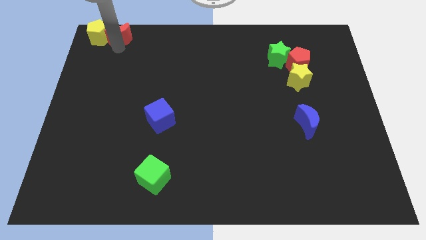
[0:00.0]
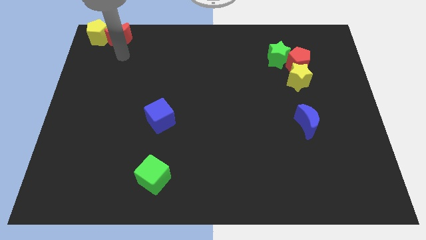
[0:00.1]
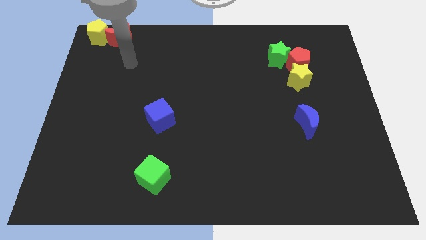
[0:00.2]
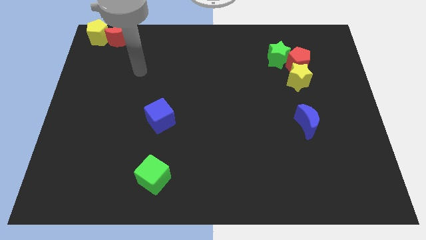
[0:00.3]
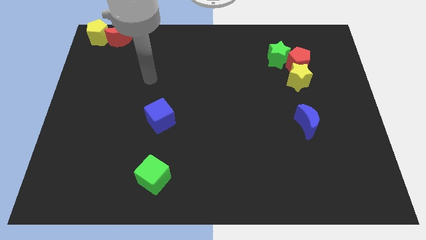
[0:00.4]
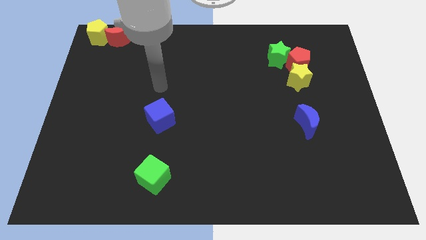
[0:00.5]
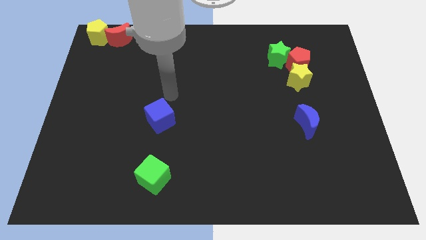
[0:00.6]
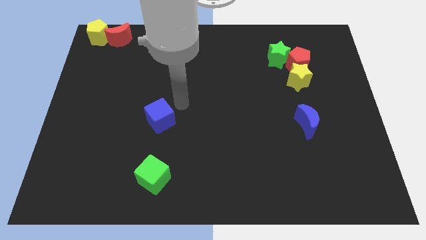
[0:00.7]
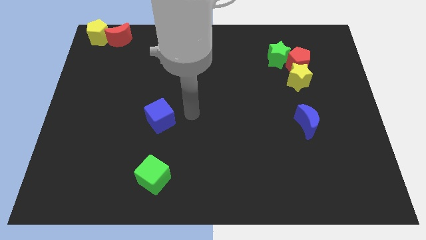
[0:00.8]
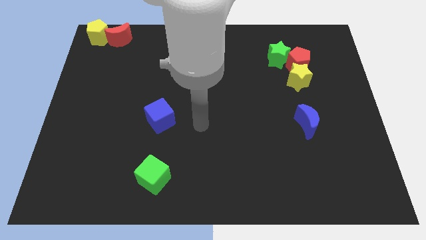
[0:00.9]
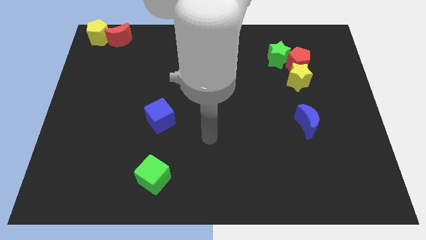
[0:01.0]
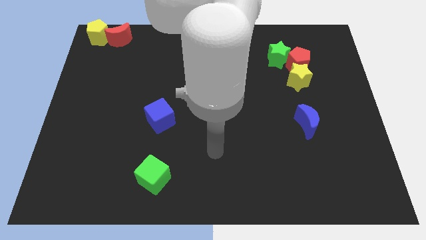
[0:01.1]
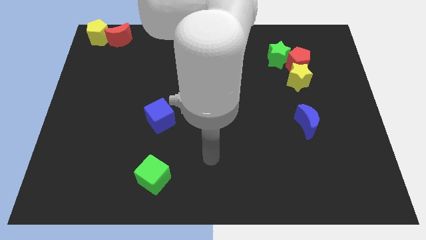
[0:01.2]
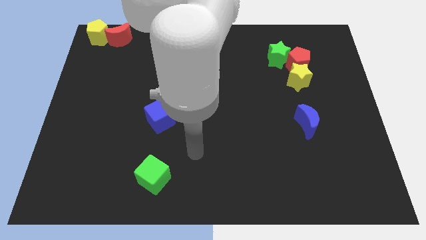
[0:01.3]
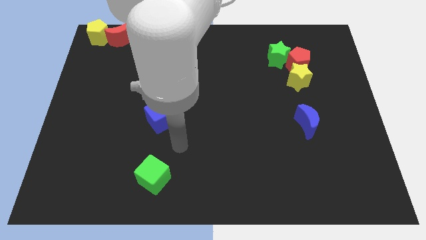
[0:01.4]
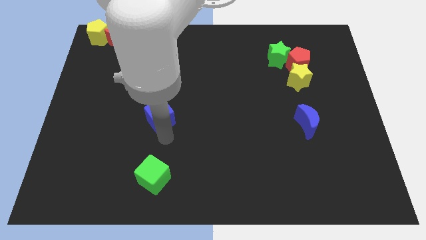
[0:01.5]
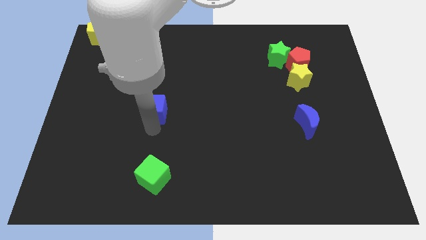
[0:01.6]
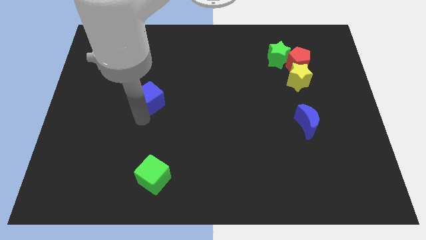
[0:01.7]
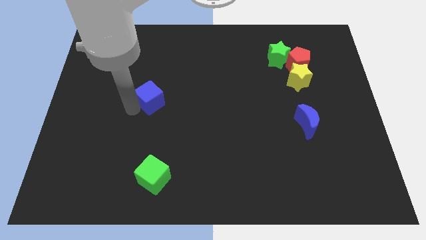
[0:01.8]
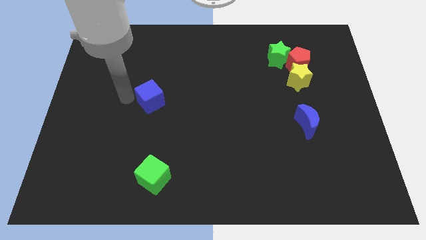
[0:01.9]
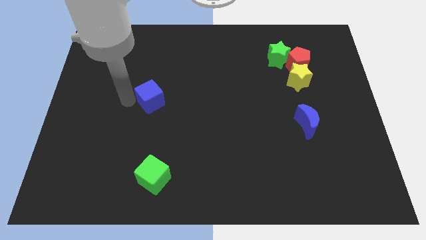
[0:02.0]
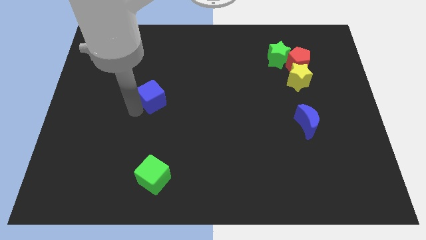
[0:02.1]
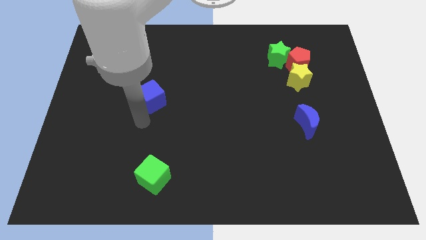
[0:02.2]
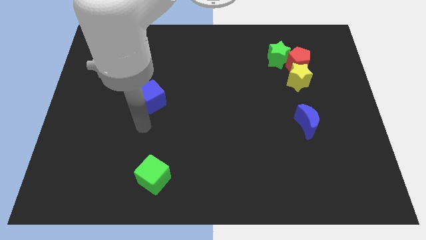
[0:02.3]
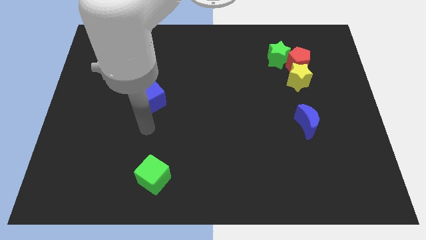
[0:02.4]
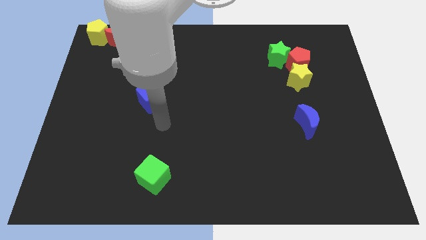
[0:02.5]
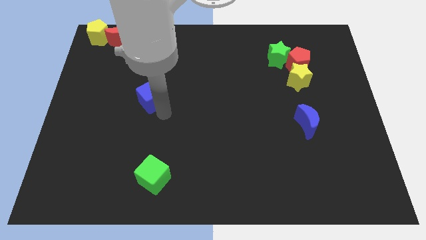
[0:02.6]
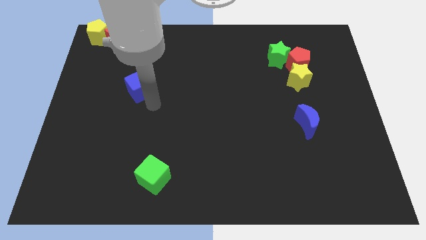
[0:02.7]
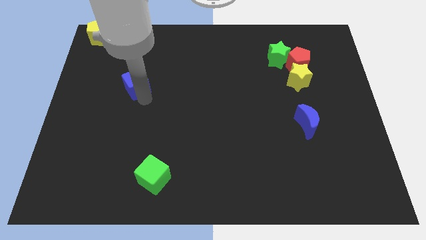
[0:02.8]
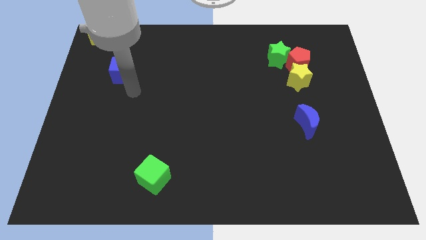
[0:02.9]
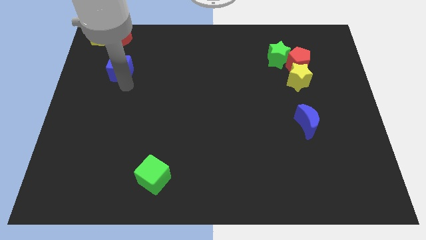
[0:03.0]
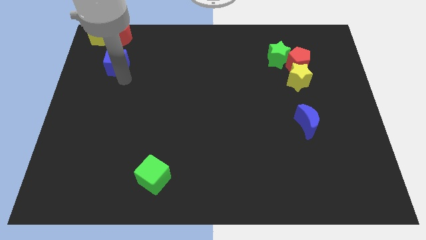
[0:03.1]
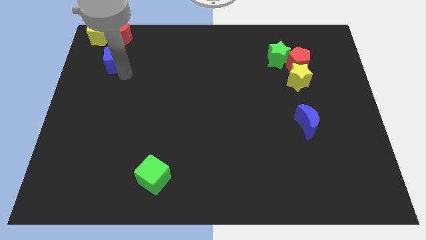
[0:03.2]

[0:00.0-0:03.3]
put the blue cube below the red moon

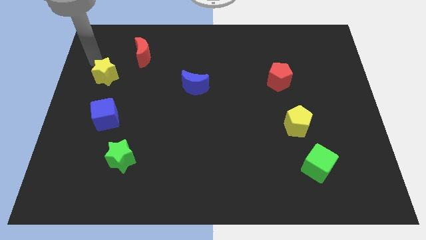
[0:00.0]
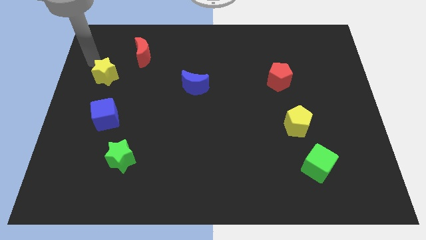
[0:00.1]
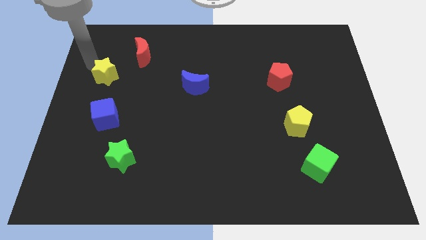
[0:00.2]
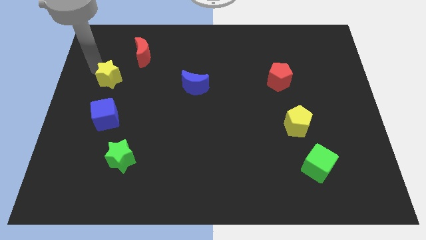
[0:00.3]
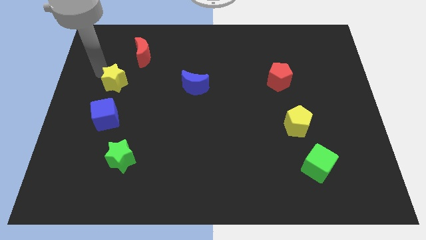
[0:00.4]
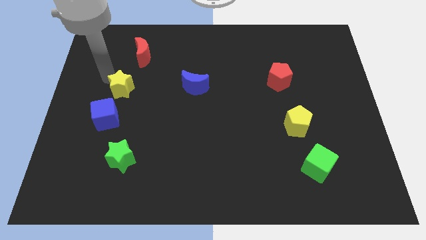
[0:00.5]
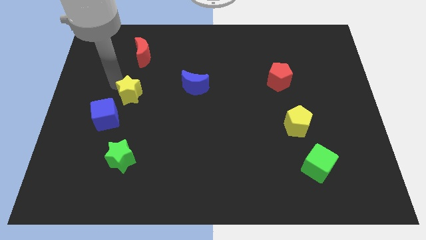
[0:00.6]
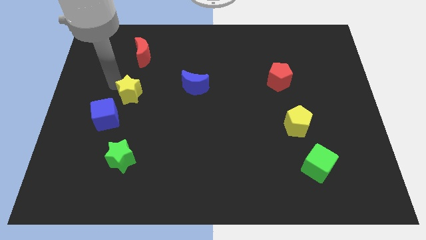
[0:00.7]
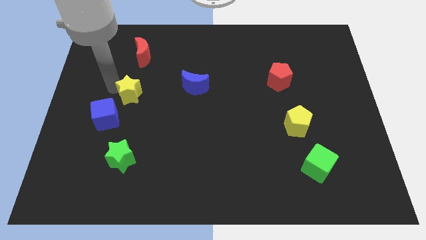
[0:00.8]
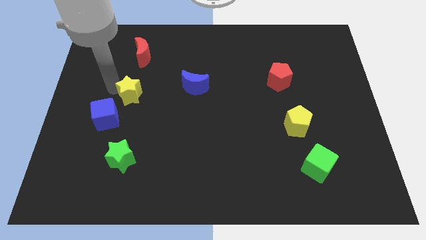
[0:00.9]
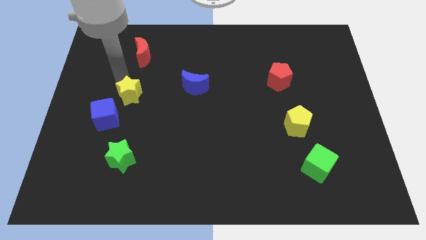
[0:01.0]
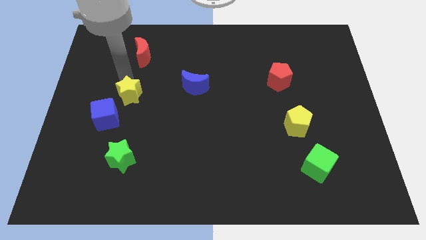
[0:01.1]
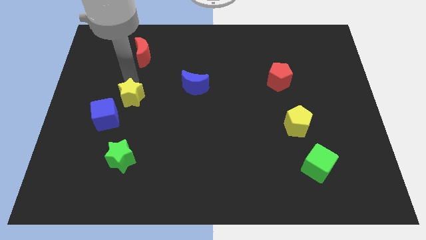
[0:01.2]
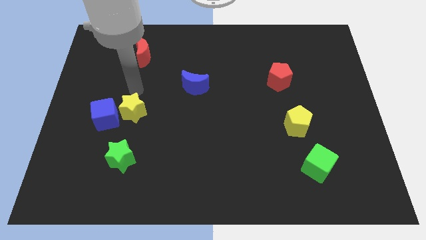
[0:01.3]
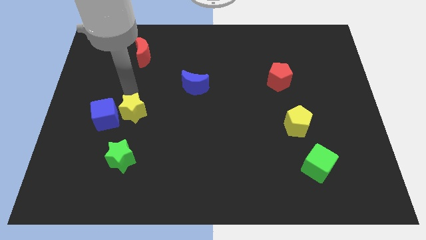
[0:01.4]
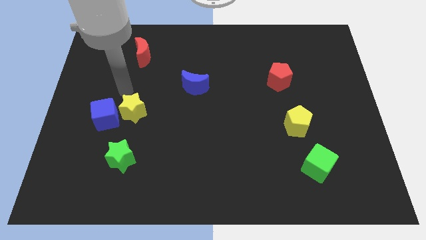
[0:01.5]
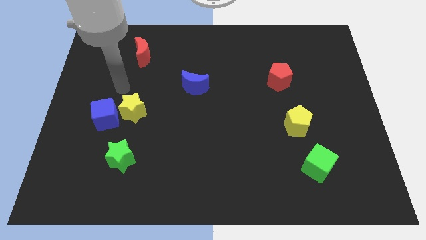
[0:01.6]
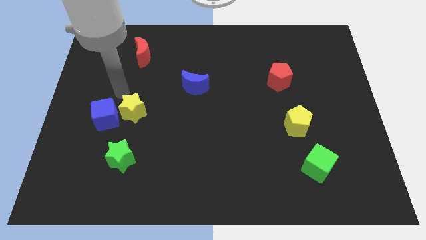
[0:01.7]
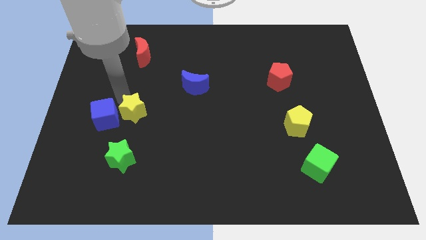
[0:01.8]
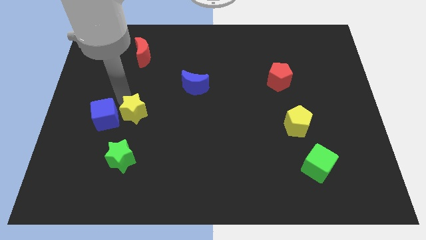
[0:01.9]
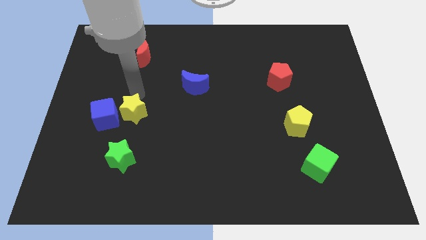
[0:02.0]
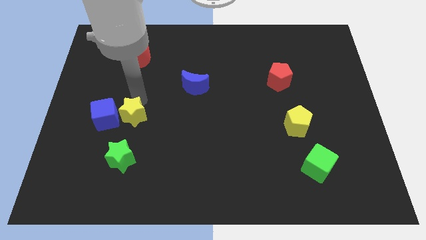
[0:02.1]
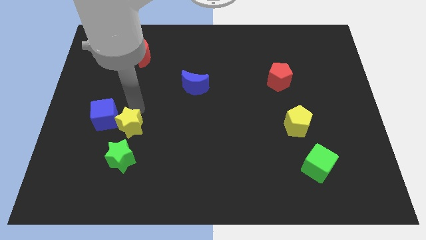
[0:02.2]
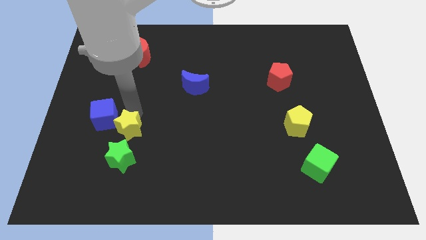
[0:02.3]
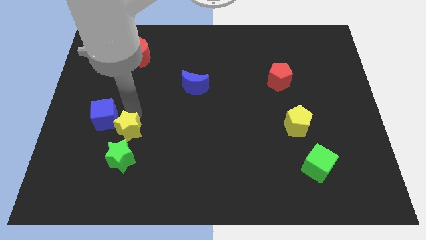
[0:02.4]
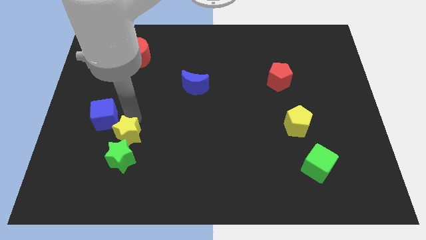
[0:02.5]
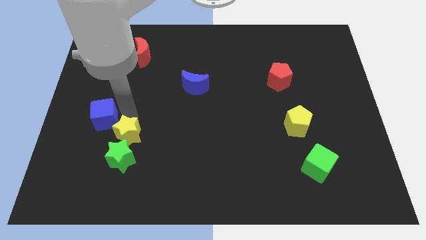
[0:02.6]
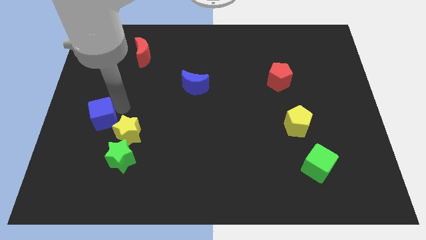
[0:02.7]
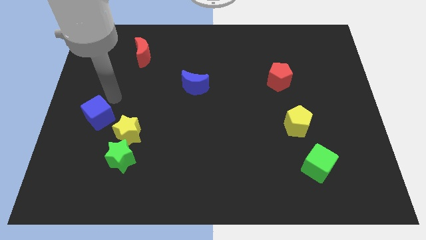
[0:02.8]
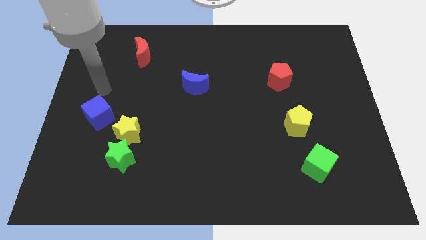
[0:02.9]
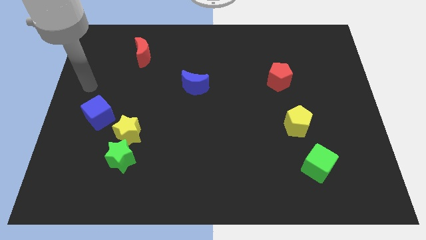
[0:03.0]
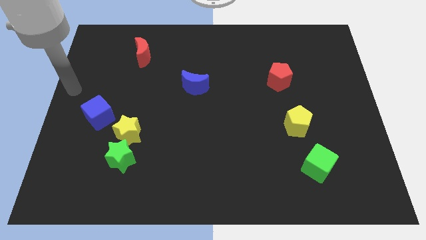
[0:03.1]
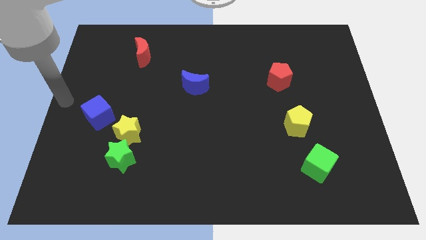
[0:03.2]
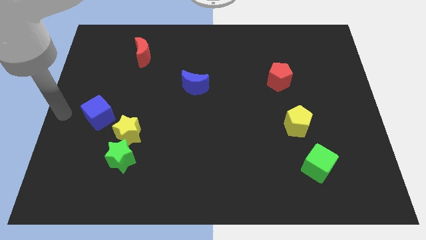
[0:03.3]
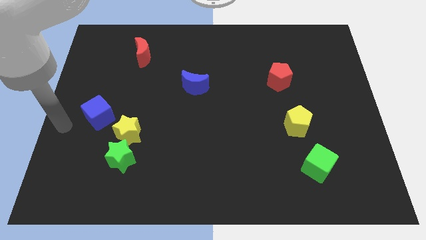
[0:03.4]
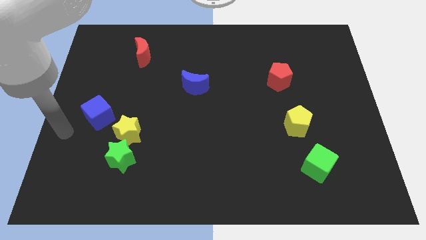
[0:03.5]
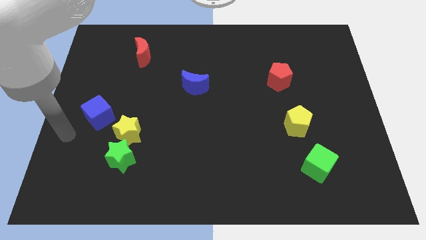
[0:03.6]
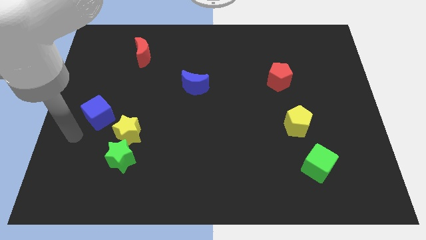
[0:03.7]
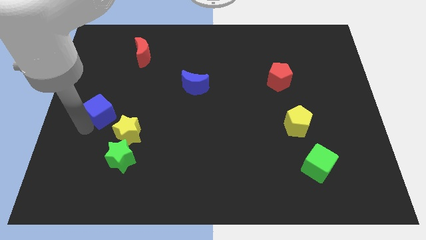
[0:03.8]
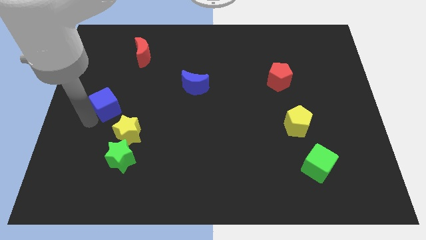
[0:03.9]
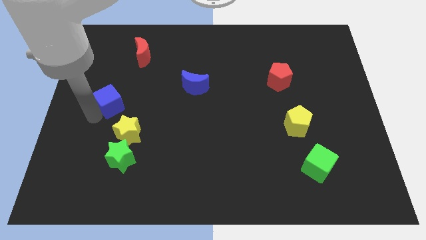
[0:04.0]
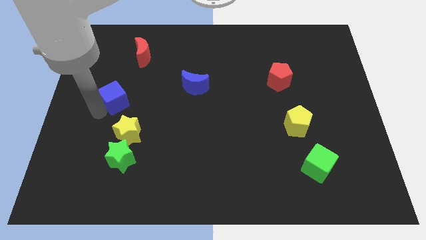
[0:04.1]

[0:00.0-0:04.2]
put the yellow star above the green star

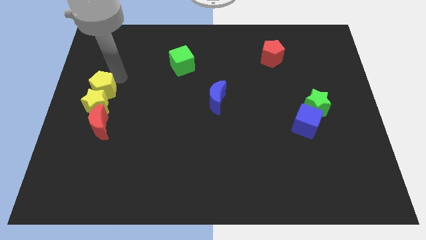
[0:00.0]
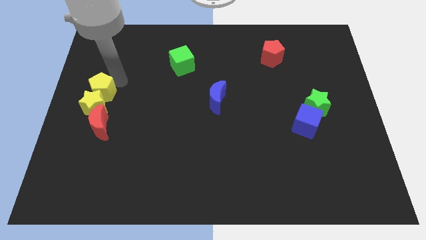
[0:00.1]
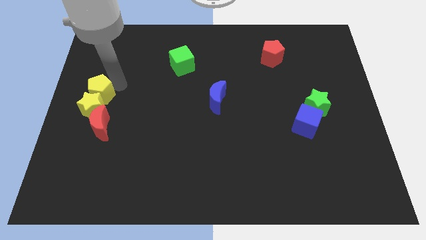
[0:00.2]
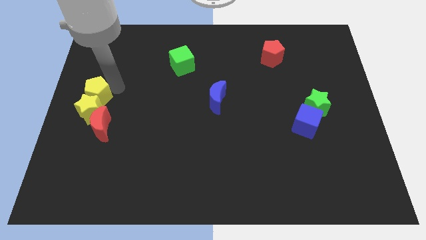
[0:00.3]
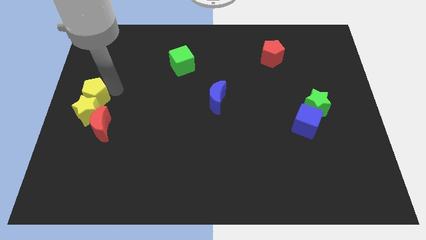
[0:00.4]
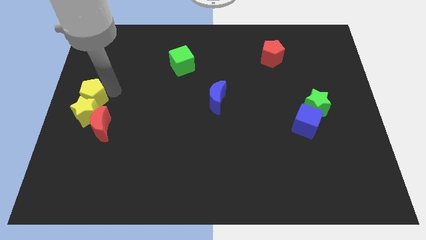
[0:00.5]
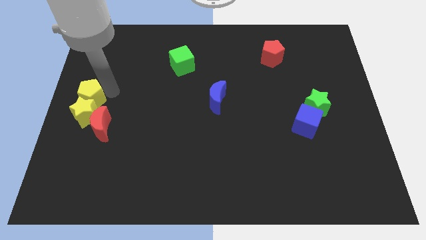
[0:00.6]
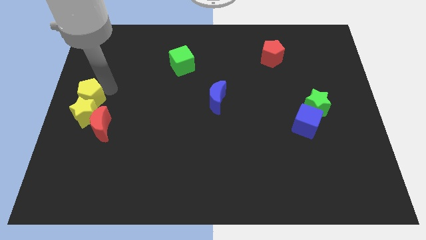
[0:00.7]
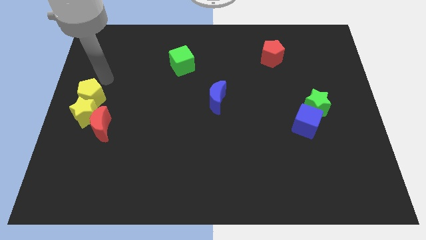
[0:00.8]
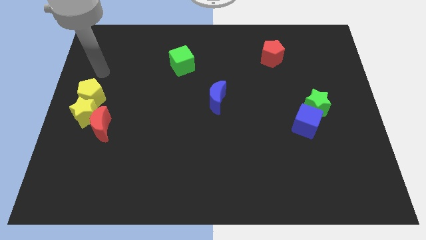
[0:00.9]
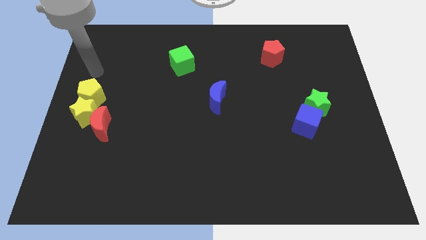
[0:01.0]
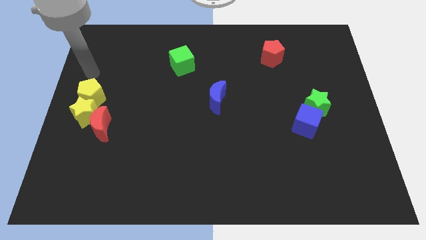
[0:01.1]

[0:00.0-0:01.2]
move yellow blocks slightly into the red crescent

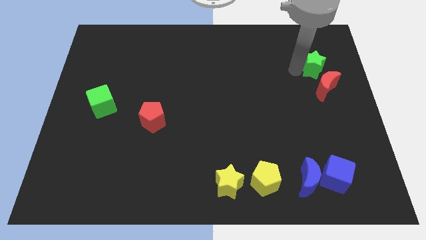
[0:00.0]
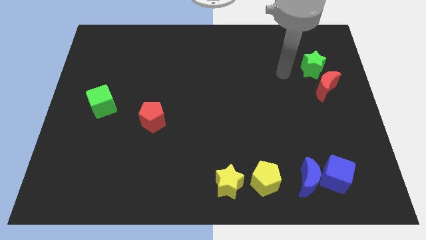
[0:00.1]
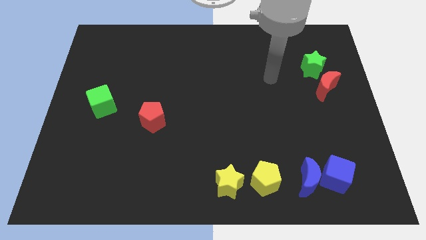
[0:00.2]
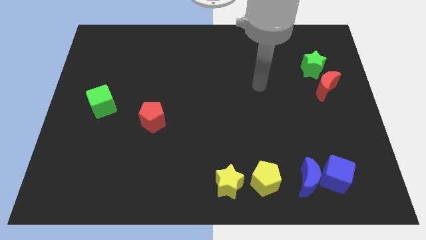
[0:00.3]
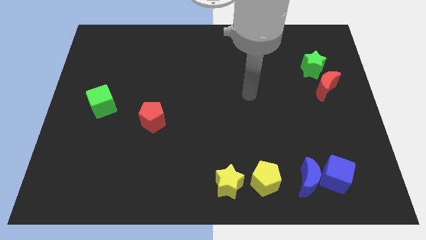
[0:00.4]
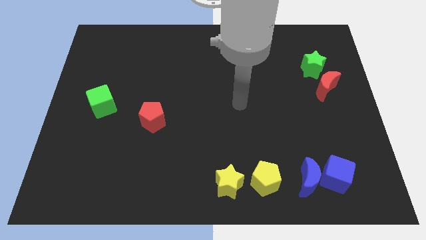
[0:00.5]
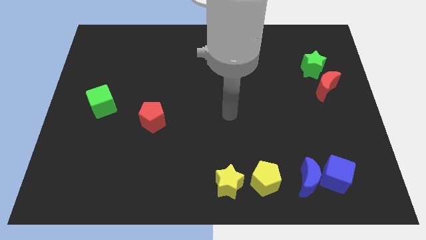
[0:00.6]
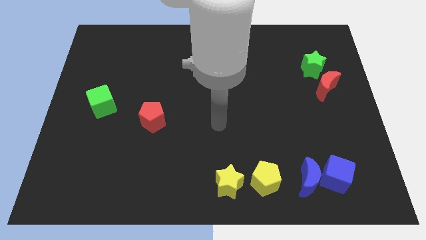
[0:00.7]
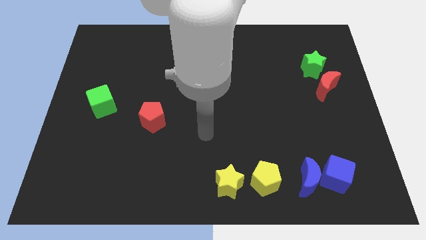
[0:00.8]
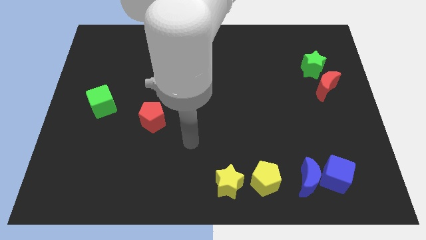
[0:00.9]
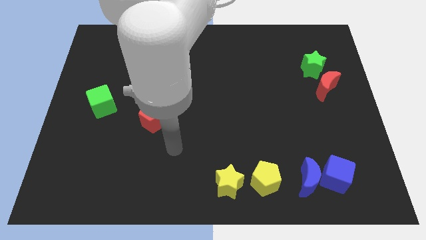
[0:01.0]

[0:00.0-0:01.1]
move arm away from green star
